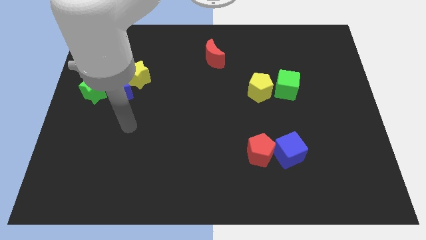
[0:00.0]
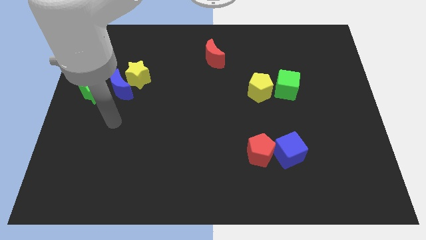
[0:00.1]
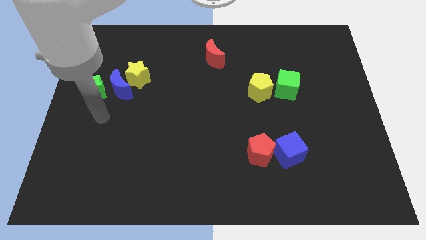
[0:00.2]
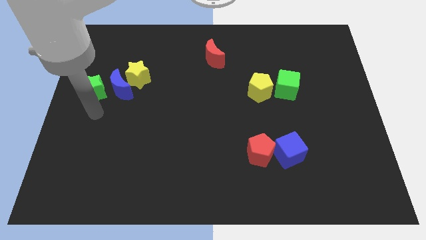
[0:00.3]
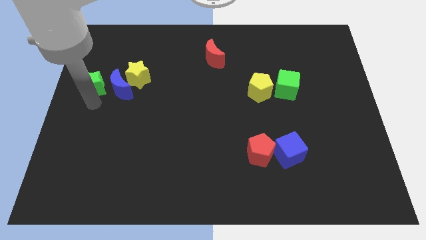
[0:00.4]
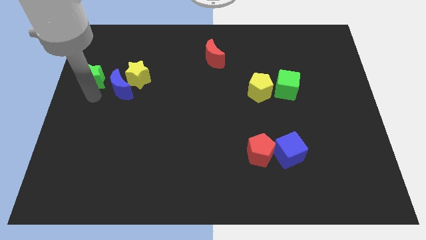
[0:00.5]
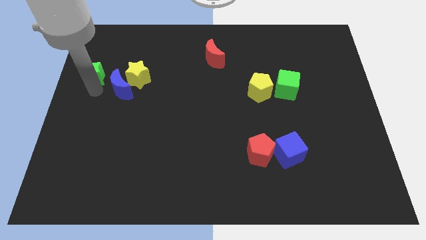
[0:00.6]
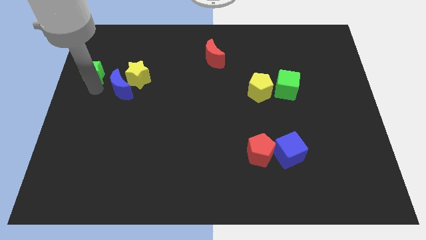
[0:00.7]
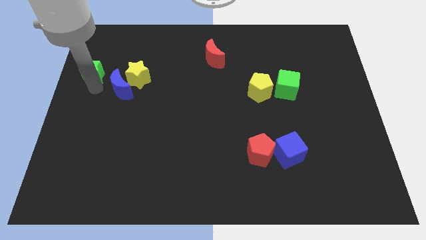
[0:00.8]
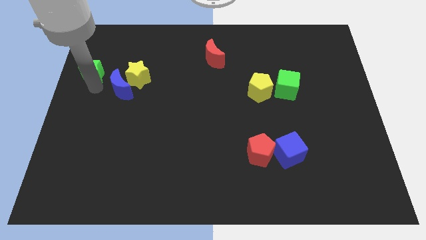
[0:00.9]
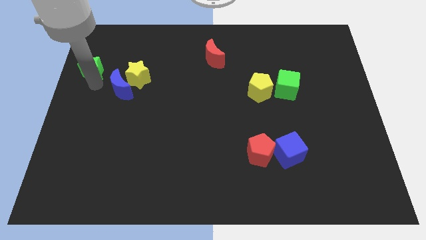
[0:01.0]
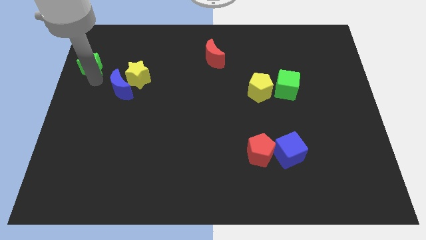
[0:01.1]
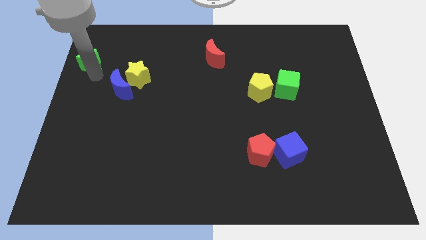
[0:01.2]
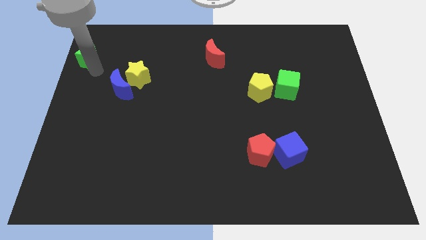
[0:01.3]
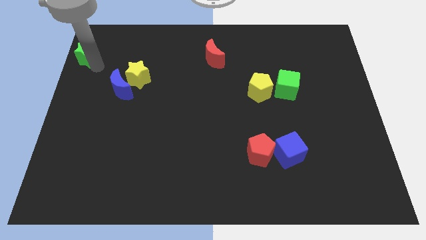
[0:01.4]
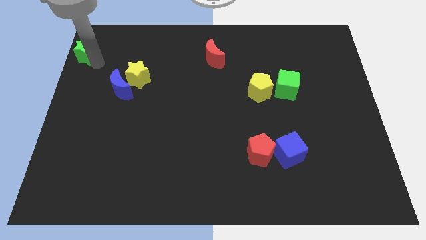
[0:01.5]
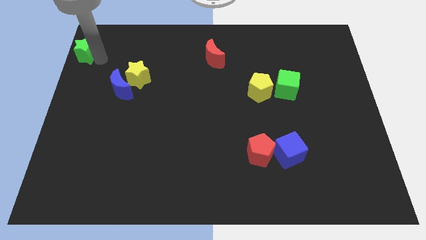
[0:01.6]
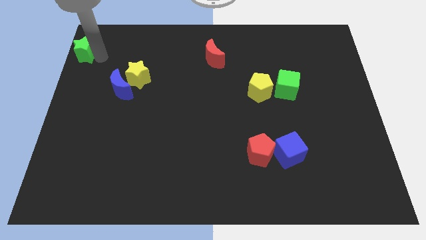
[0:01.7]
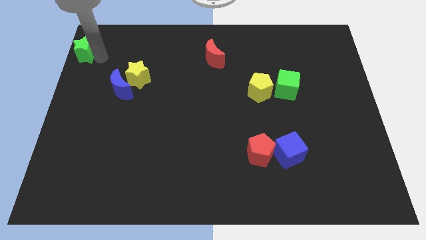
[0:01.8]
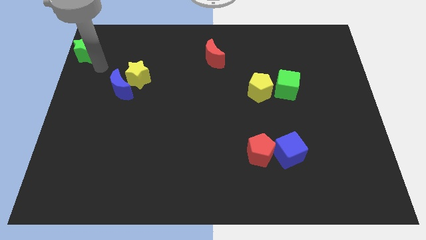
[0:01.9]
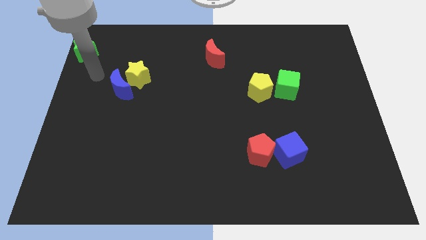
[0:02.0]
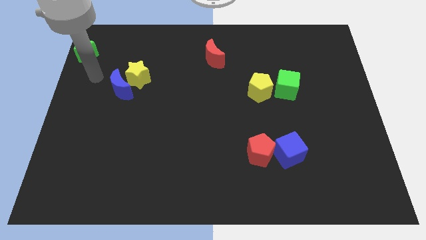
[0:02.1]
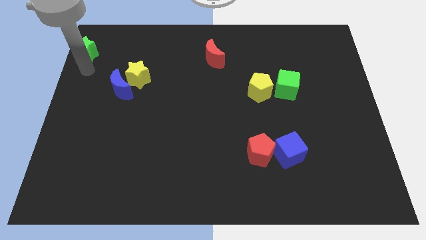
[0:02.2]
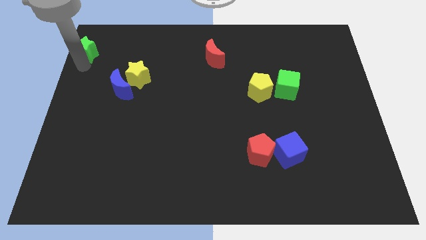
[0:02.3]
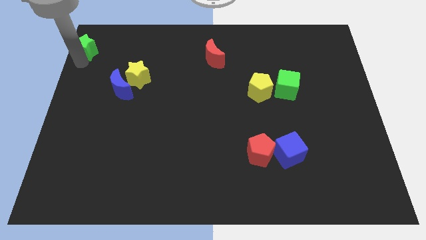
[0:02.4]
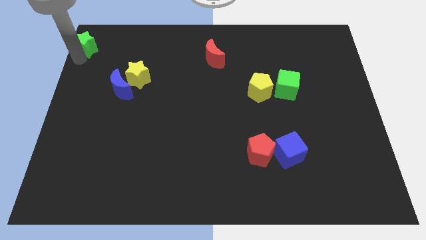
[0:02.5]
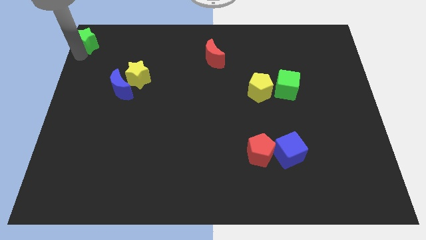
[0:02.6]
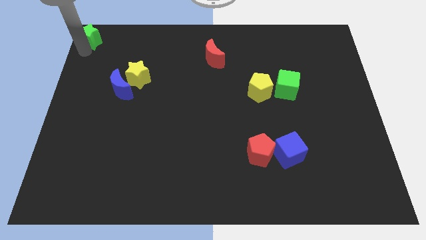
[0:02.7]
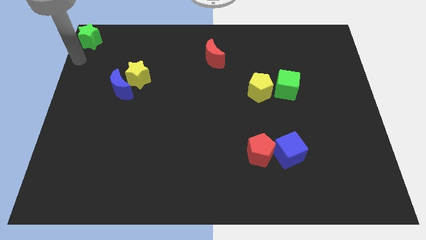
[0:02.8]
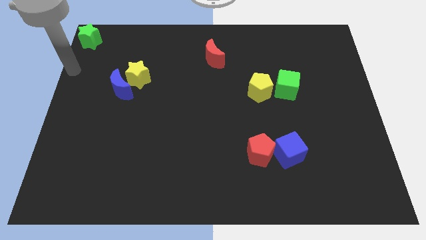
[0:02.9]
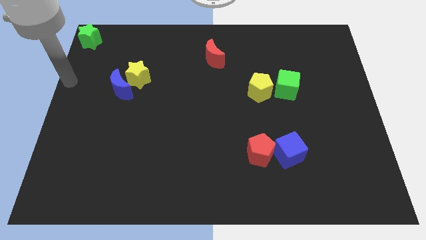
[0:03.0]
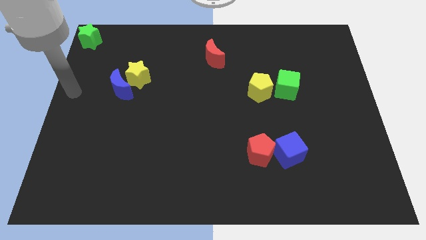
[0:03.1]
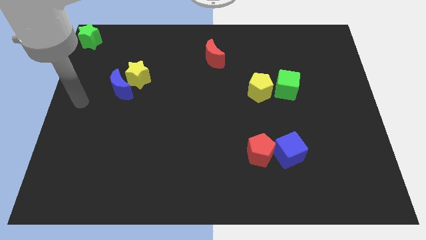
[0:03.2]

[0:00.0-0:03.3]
push green star at the top left center of the board

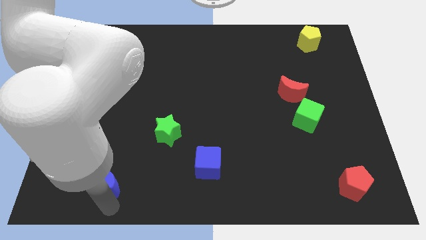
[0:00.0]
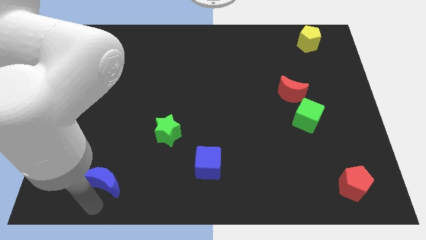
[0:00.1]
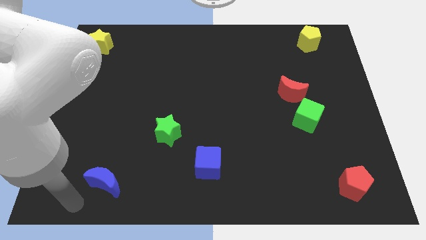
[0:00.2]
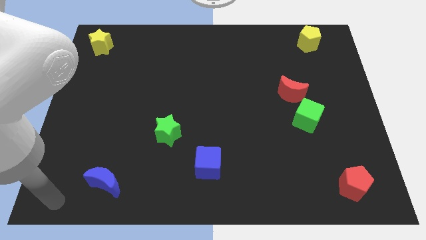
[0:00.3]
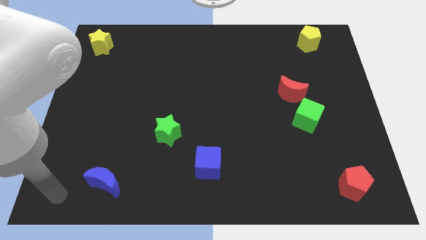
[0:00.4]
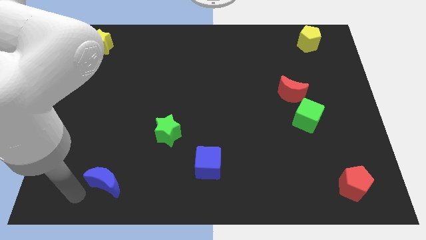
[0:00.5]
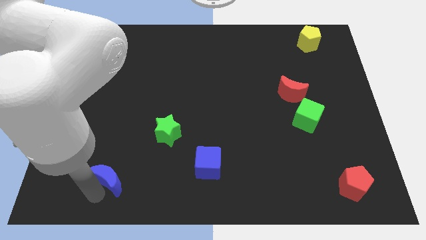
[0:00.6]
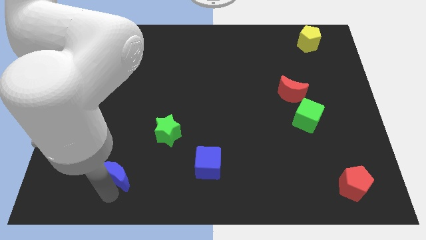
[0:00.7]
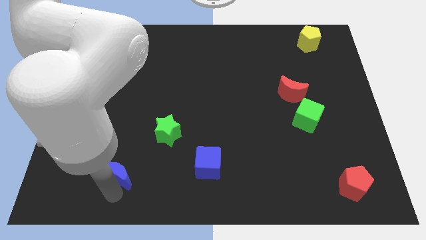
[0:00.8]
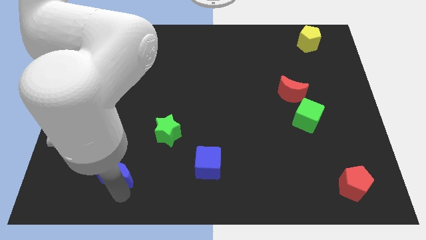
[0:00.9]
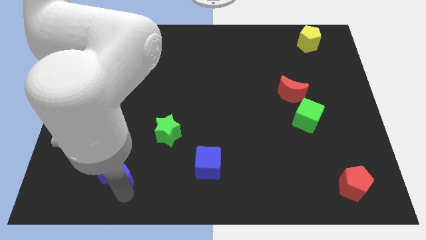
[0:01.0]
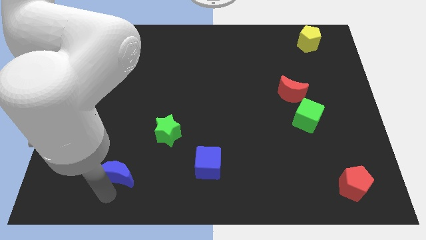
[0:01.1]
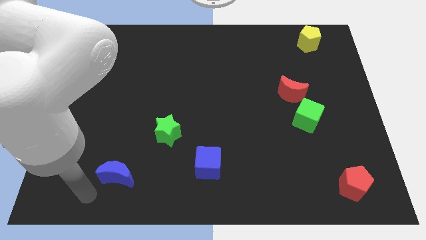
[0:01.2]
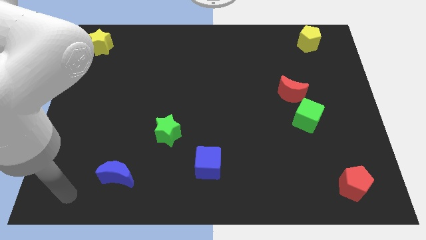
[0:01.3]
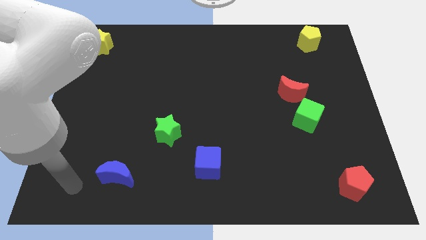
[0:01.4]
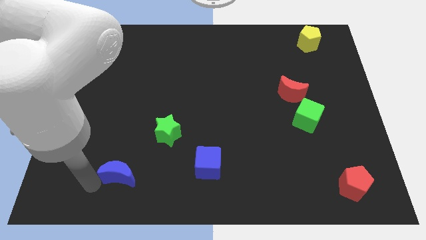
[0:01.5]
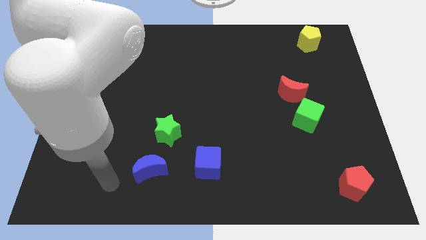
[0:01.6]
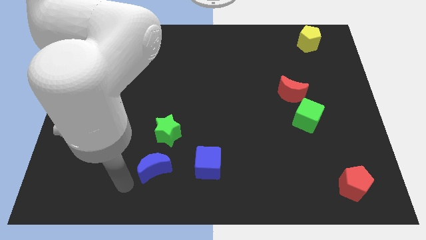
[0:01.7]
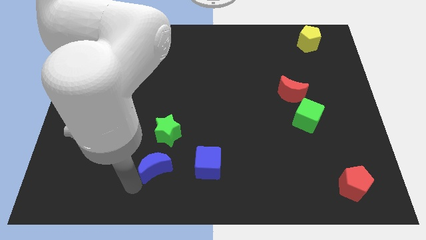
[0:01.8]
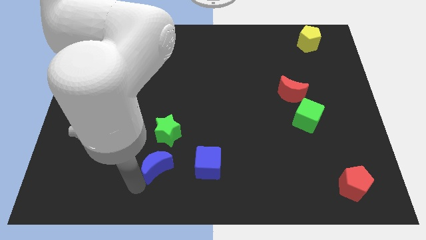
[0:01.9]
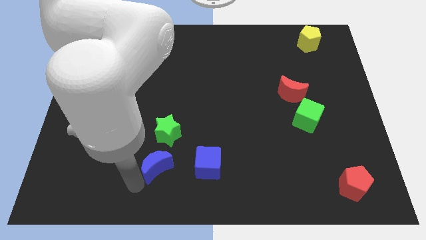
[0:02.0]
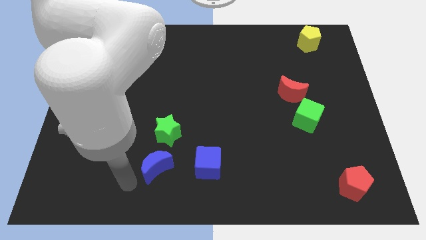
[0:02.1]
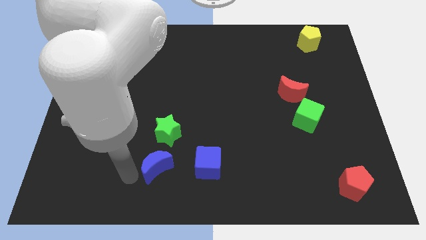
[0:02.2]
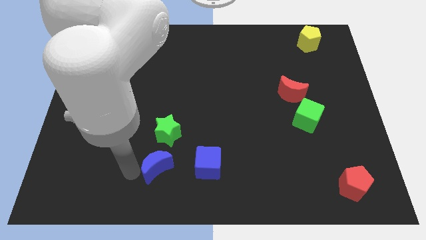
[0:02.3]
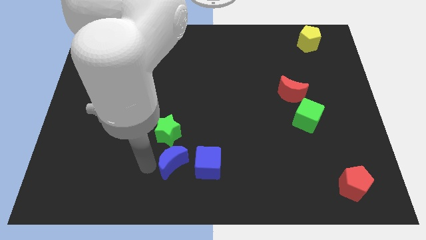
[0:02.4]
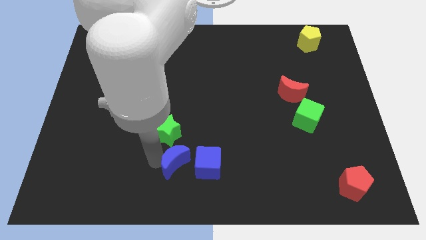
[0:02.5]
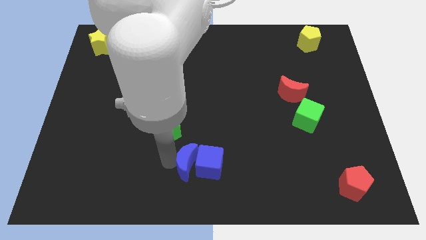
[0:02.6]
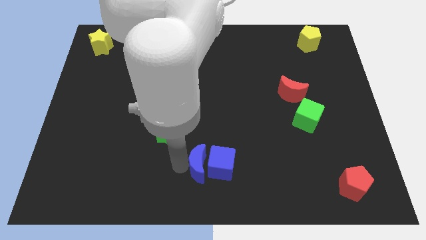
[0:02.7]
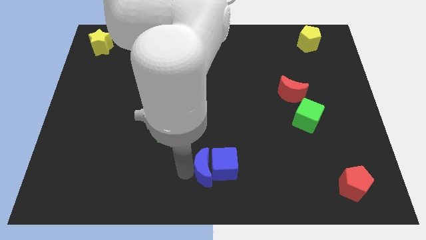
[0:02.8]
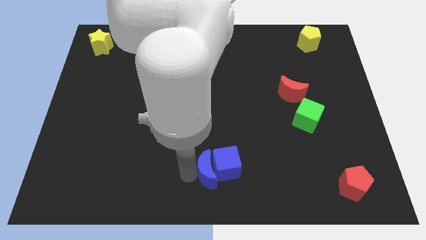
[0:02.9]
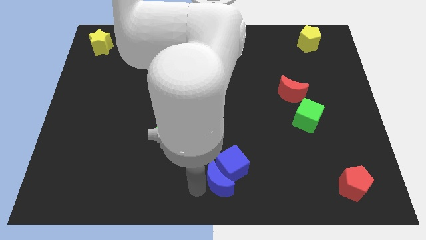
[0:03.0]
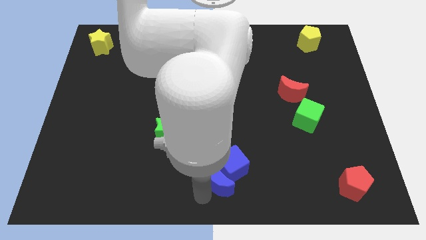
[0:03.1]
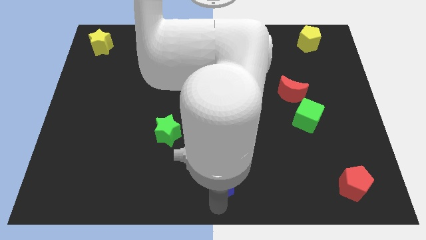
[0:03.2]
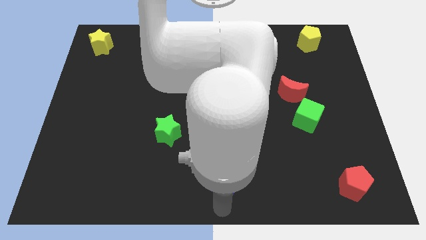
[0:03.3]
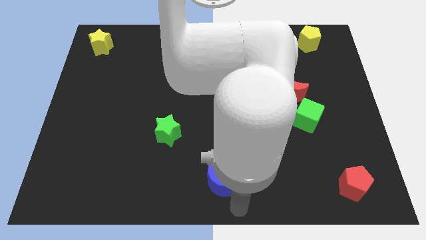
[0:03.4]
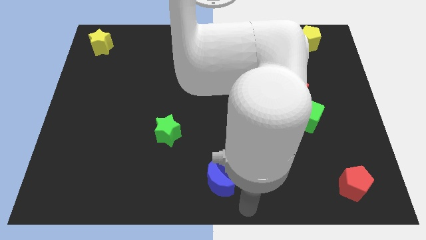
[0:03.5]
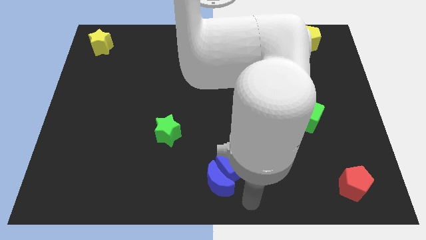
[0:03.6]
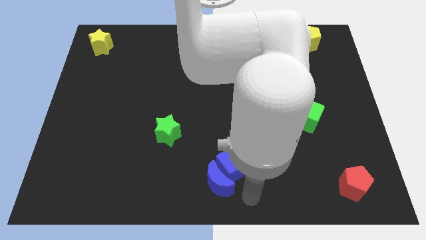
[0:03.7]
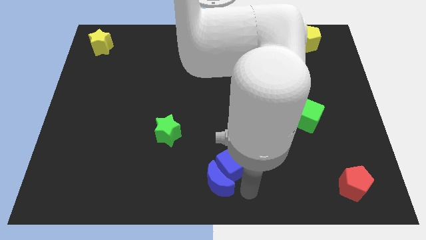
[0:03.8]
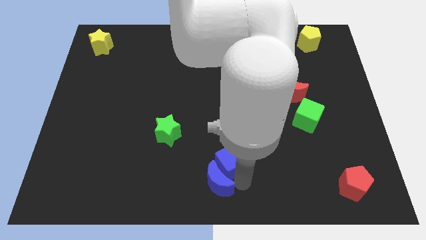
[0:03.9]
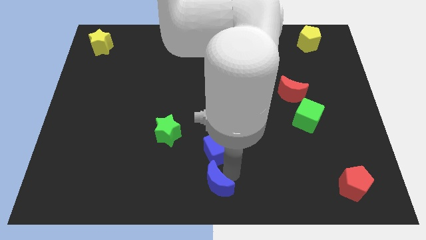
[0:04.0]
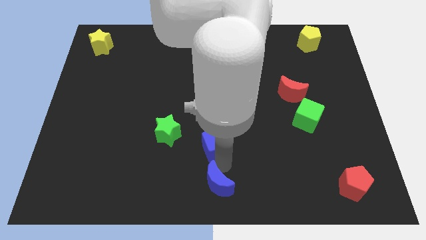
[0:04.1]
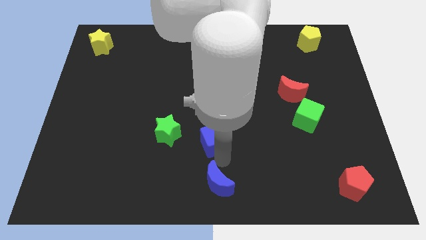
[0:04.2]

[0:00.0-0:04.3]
push the blue crescent into the blue cube

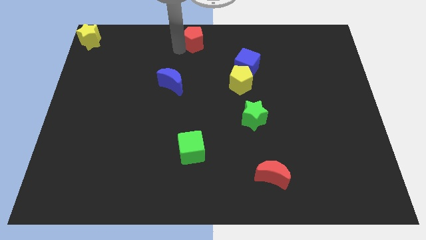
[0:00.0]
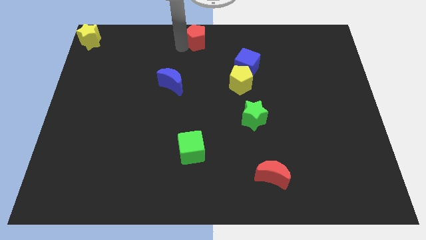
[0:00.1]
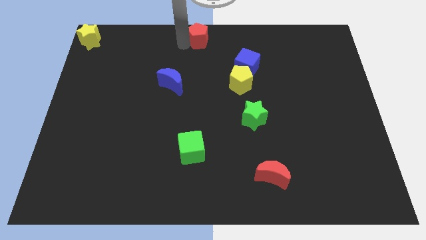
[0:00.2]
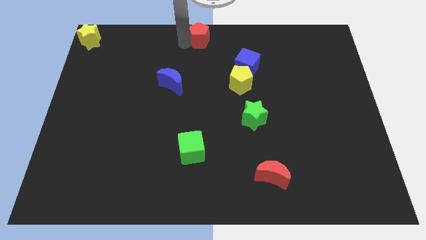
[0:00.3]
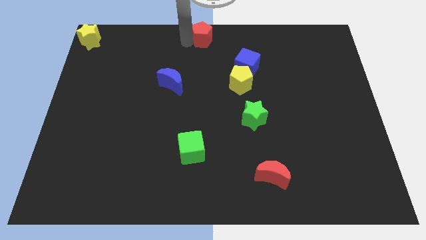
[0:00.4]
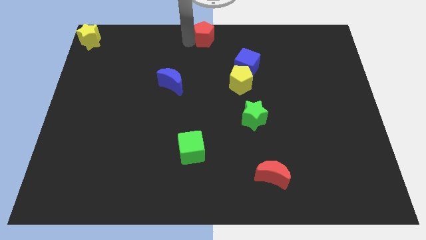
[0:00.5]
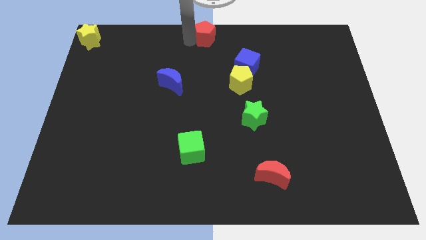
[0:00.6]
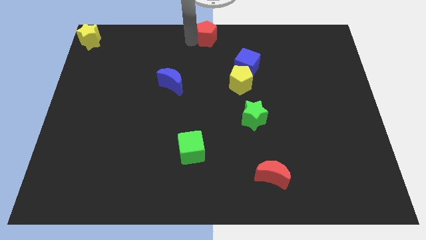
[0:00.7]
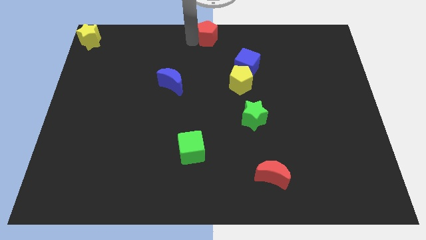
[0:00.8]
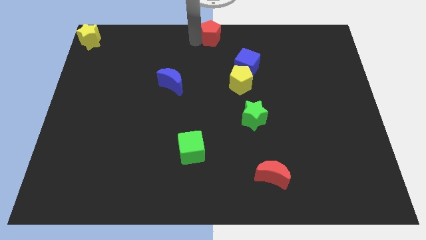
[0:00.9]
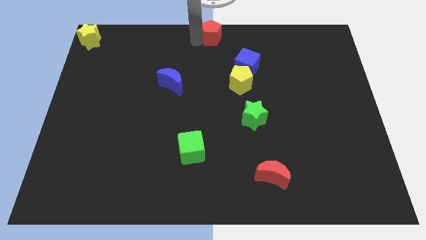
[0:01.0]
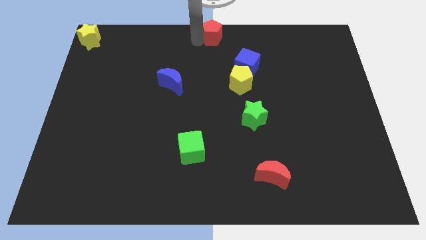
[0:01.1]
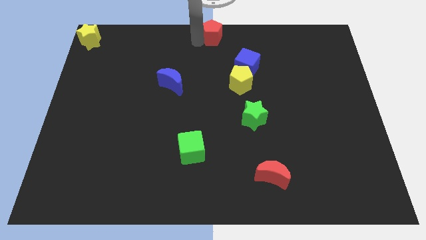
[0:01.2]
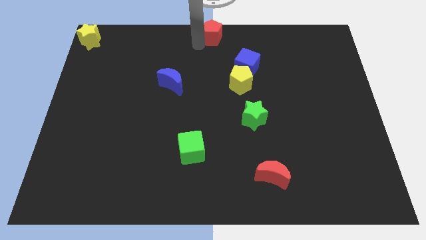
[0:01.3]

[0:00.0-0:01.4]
move the red pentagon to the top middle of the board
